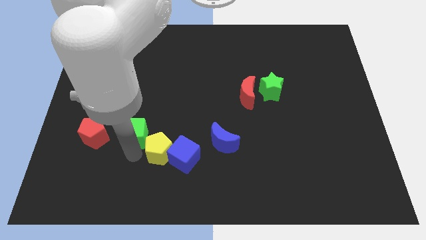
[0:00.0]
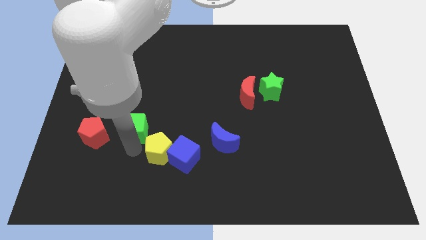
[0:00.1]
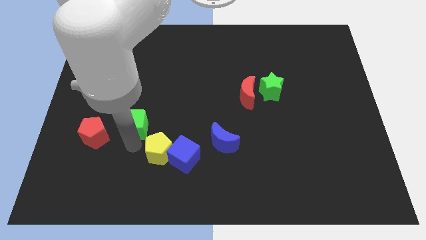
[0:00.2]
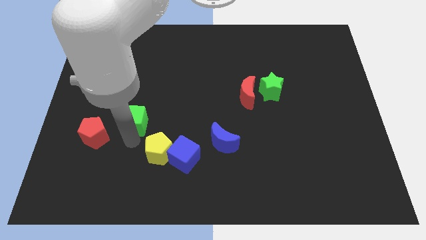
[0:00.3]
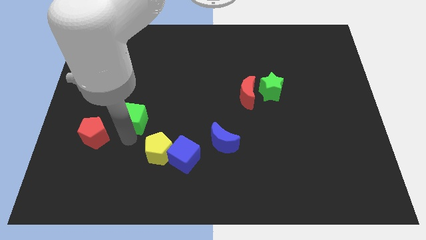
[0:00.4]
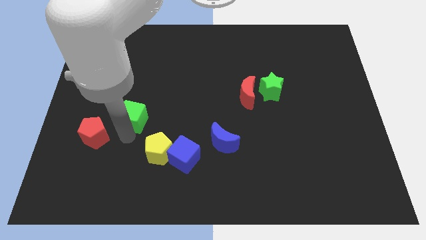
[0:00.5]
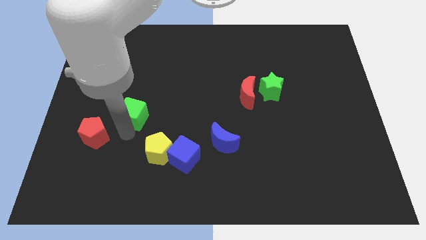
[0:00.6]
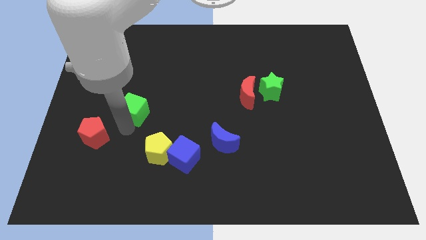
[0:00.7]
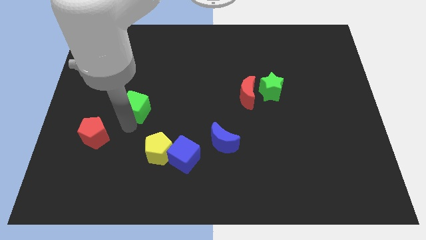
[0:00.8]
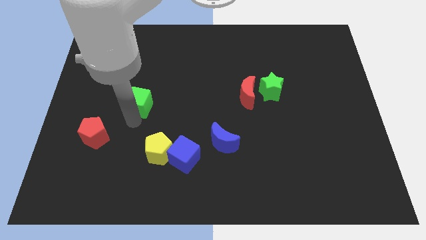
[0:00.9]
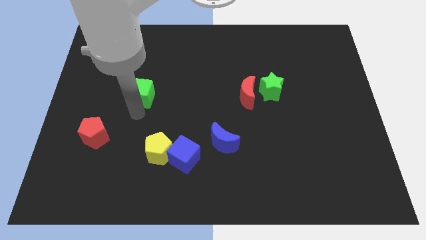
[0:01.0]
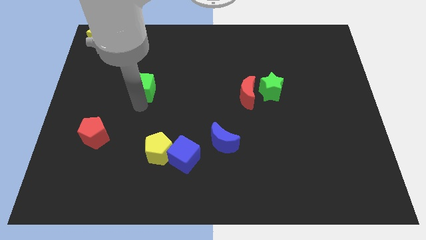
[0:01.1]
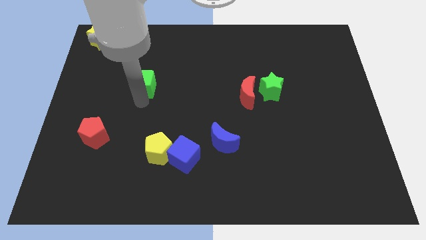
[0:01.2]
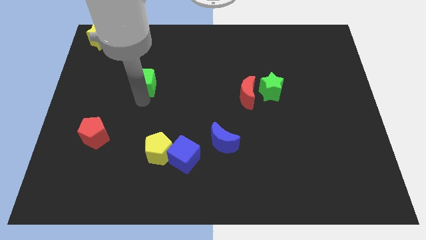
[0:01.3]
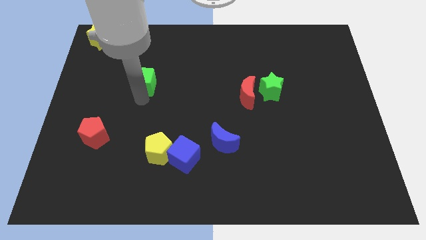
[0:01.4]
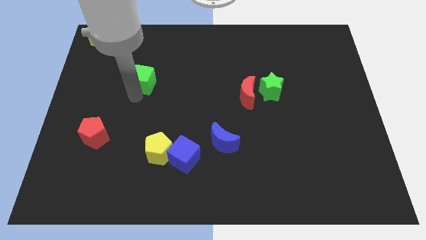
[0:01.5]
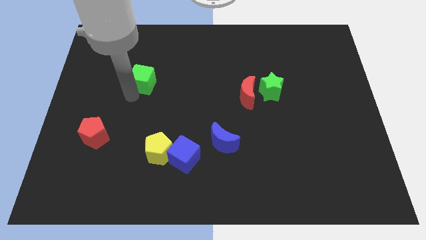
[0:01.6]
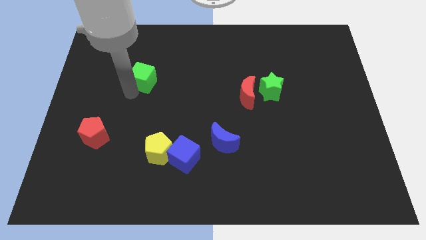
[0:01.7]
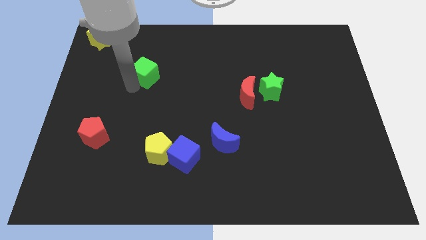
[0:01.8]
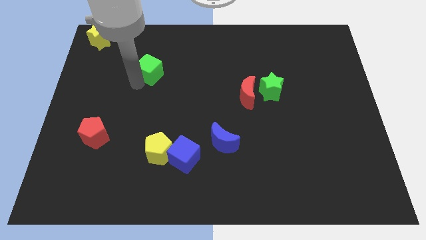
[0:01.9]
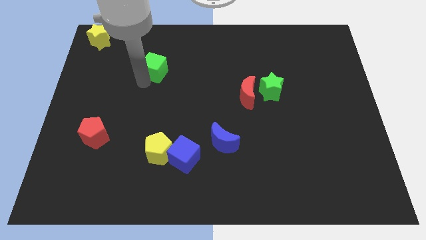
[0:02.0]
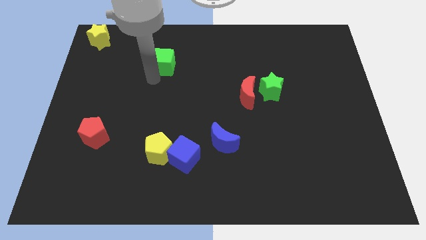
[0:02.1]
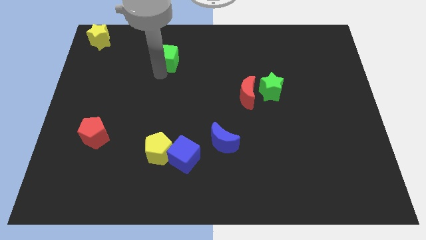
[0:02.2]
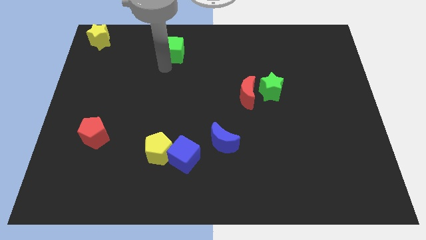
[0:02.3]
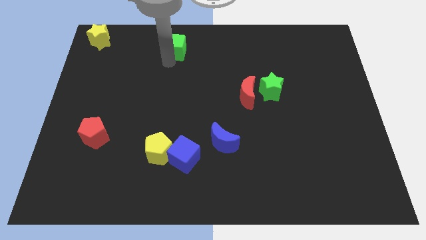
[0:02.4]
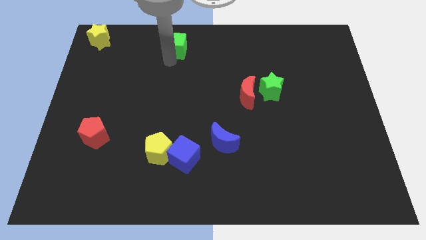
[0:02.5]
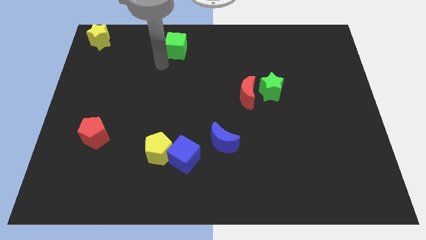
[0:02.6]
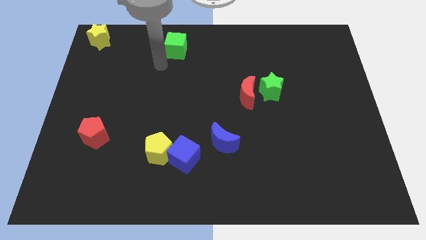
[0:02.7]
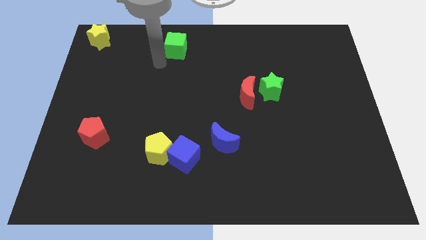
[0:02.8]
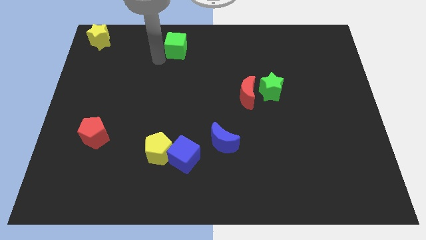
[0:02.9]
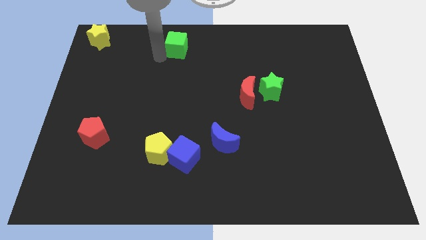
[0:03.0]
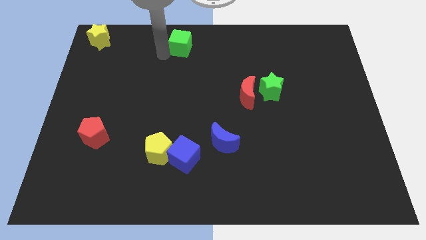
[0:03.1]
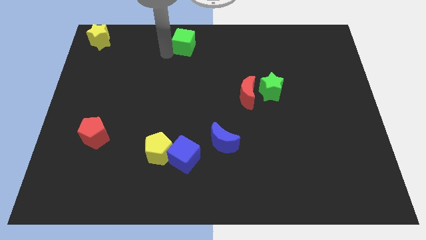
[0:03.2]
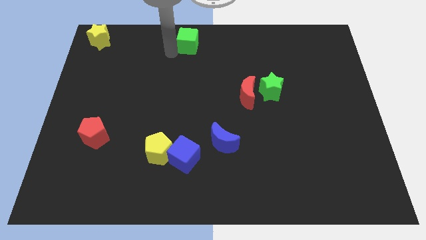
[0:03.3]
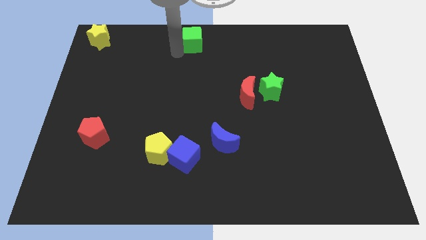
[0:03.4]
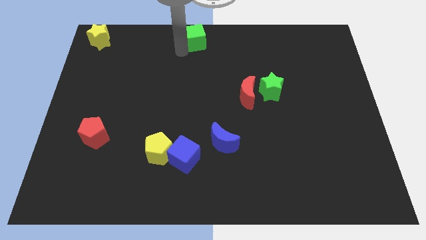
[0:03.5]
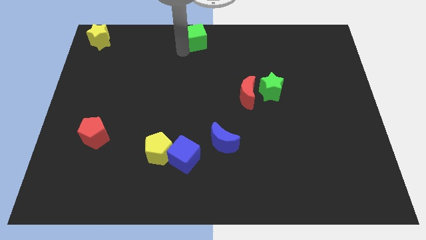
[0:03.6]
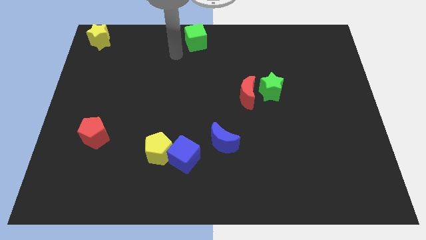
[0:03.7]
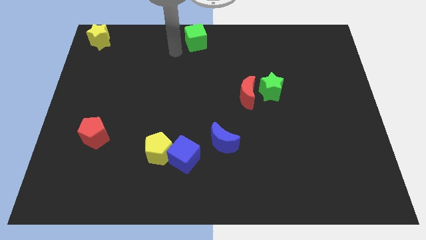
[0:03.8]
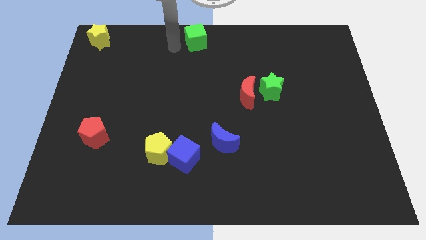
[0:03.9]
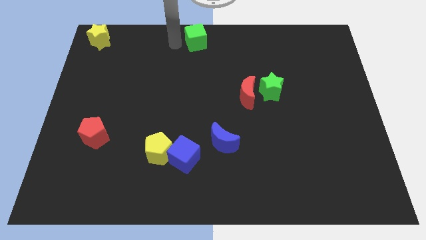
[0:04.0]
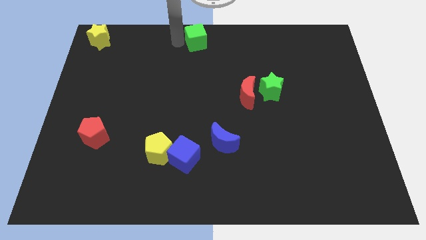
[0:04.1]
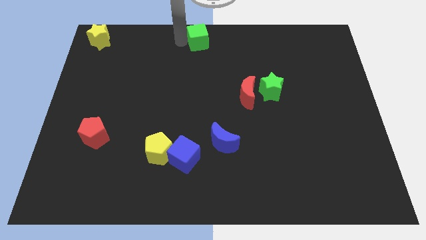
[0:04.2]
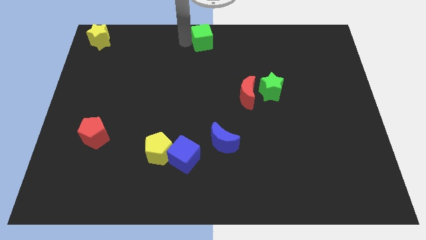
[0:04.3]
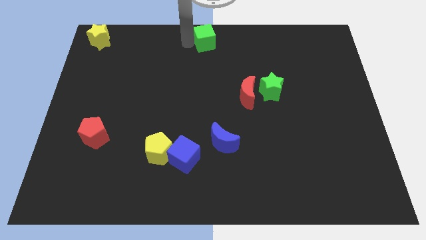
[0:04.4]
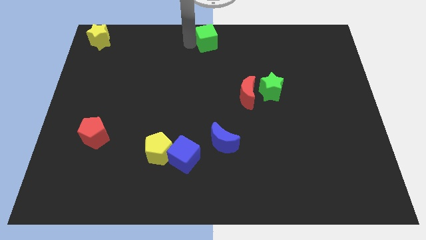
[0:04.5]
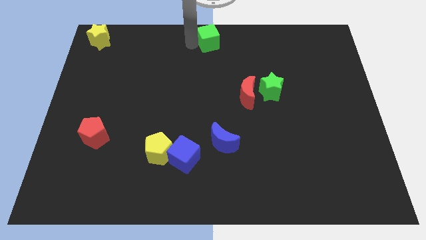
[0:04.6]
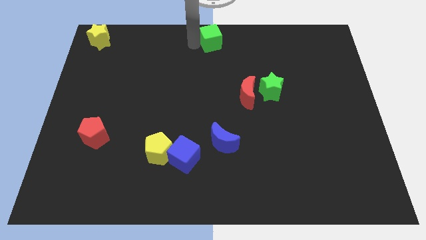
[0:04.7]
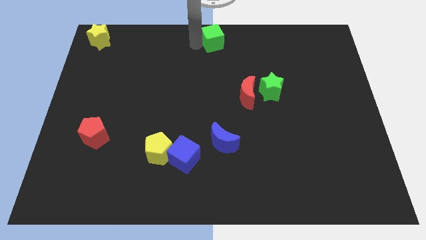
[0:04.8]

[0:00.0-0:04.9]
push the green cube to the top center of the board

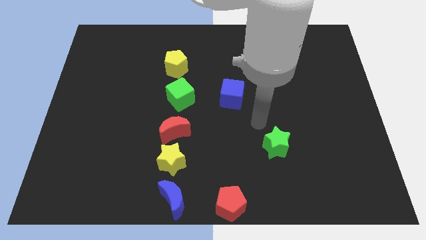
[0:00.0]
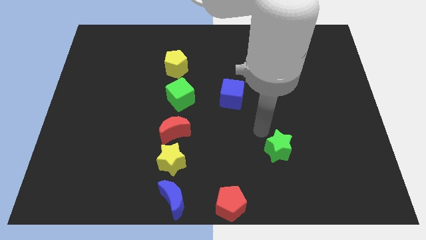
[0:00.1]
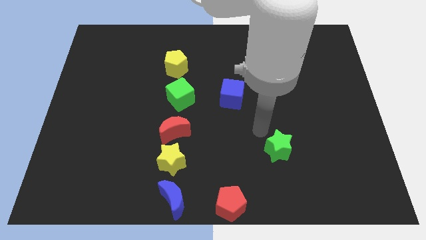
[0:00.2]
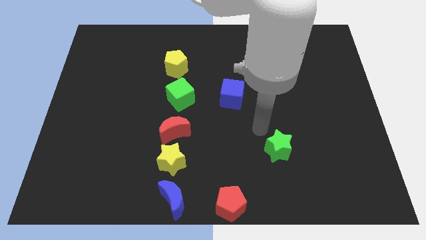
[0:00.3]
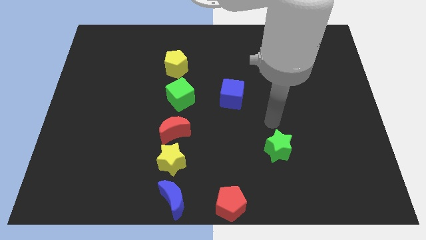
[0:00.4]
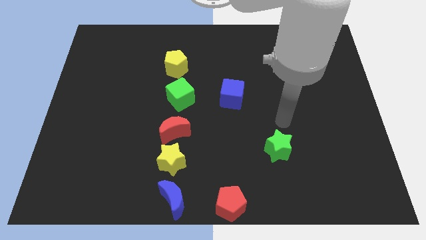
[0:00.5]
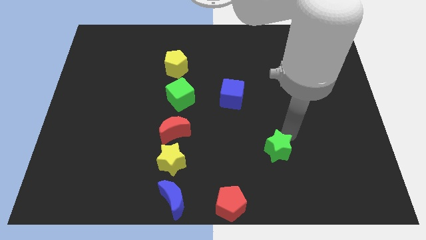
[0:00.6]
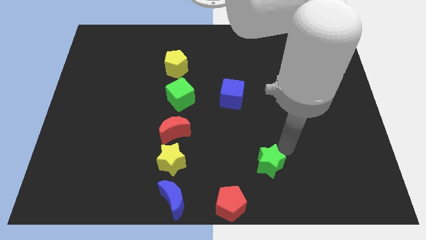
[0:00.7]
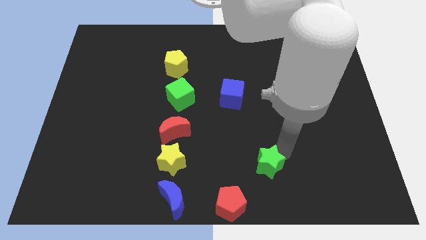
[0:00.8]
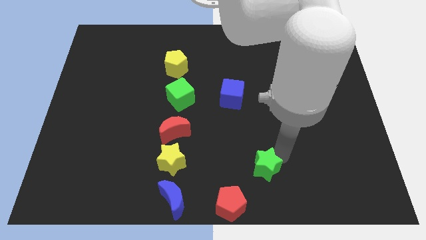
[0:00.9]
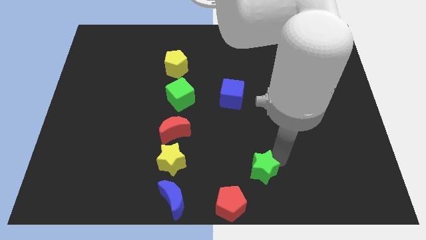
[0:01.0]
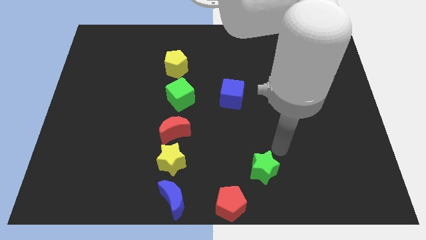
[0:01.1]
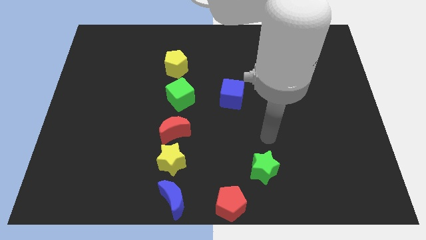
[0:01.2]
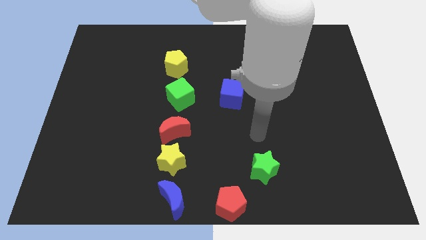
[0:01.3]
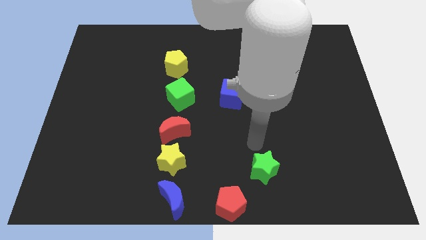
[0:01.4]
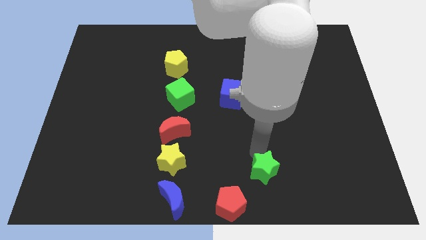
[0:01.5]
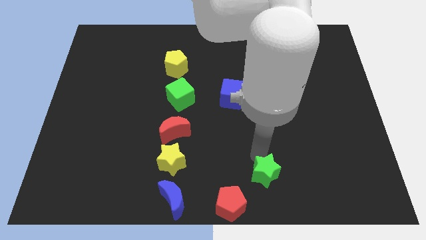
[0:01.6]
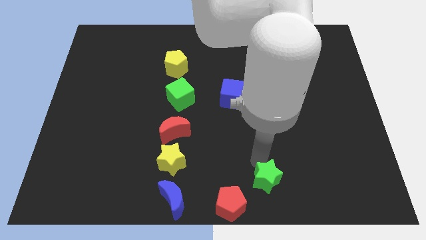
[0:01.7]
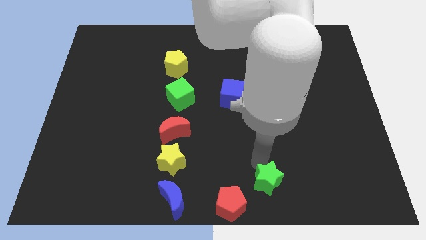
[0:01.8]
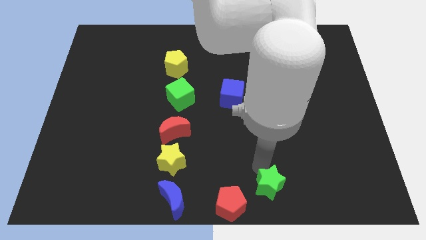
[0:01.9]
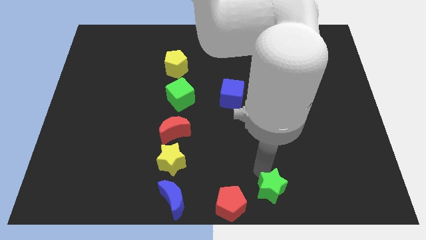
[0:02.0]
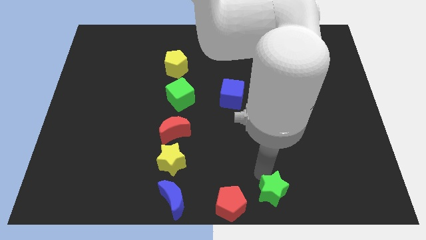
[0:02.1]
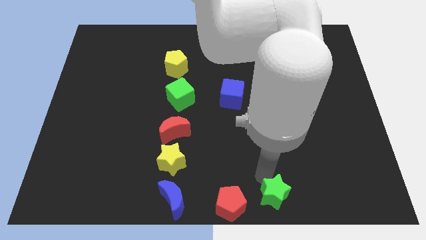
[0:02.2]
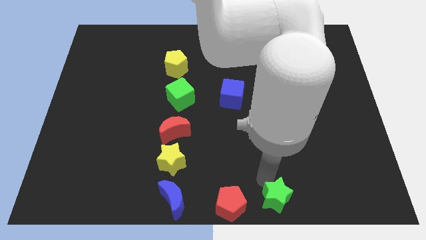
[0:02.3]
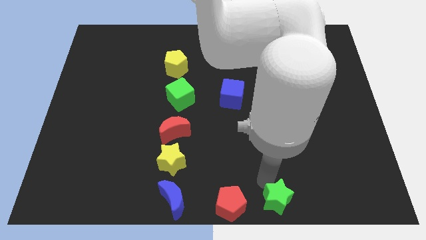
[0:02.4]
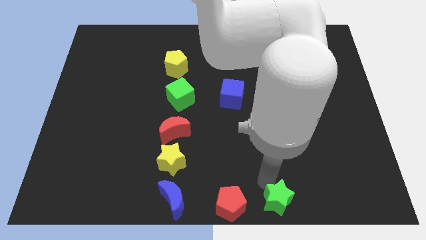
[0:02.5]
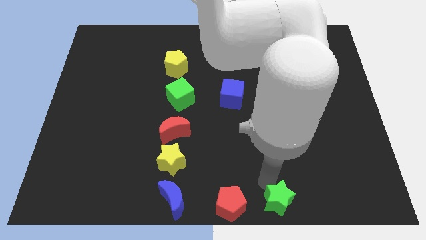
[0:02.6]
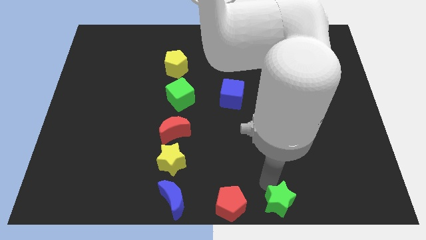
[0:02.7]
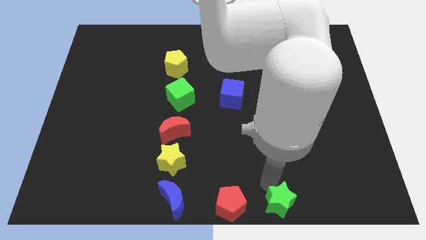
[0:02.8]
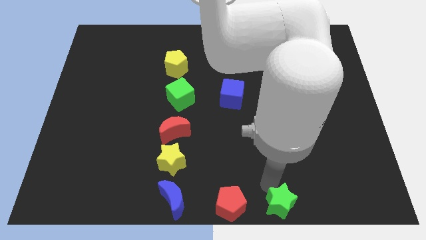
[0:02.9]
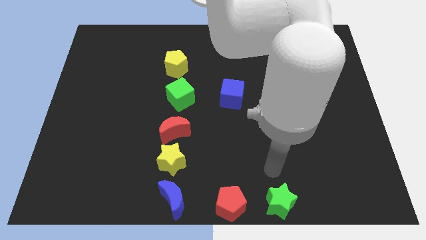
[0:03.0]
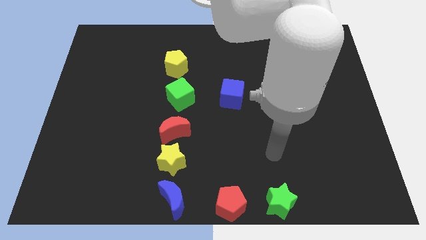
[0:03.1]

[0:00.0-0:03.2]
place the green star to the right side of red pentagon

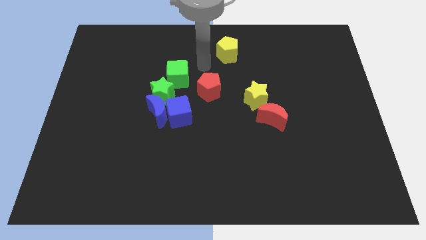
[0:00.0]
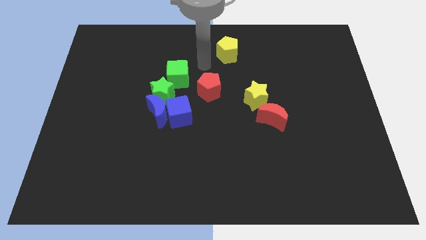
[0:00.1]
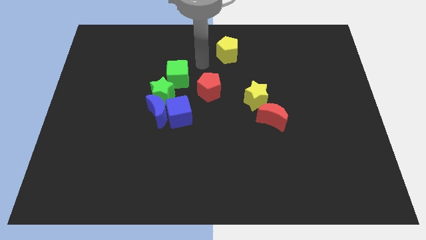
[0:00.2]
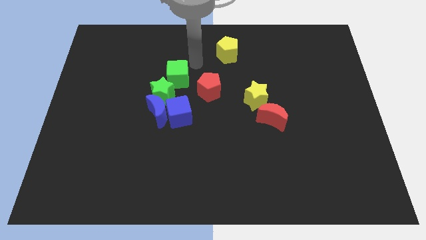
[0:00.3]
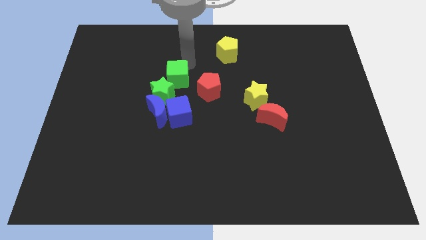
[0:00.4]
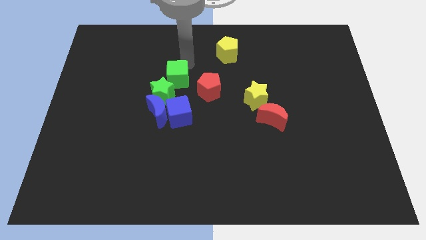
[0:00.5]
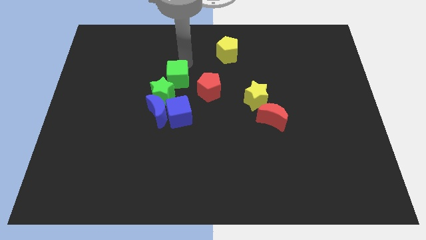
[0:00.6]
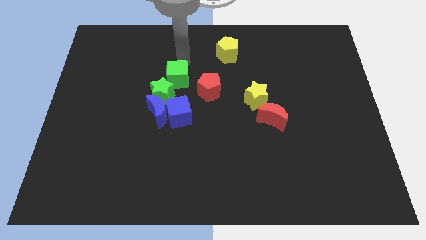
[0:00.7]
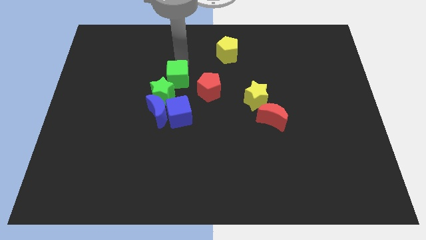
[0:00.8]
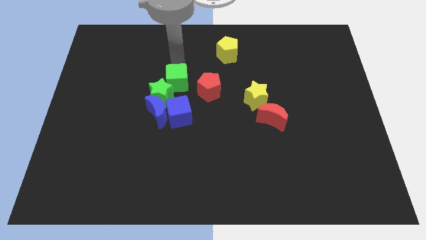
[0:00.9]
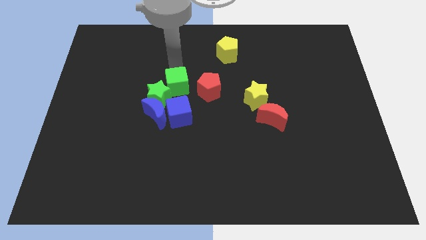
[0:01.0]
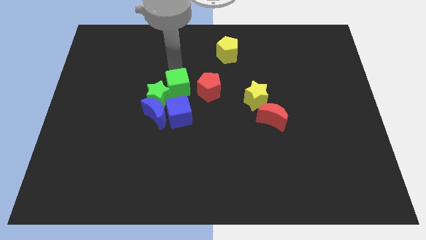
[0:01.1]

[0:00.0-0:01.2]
move the green cube into the green star
